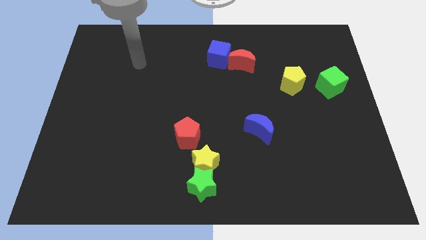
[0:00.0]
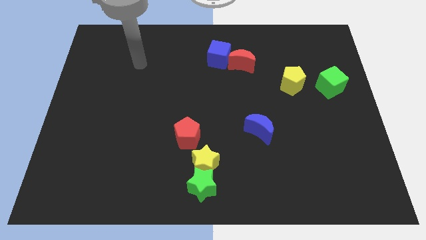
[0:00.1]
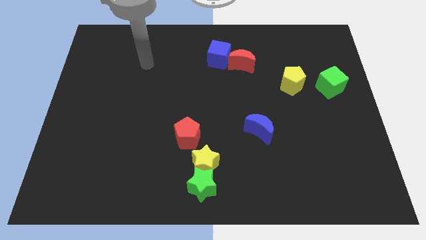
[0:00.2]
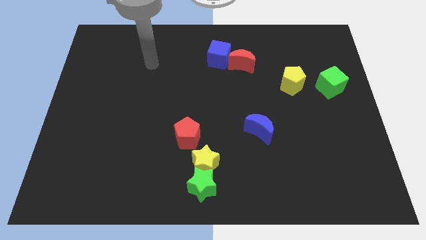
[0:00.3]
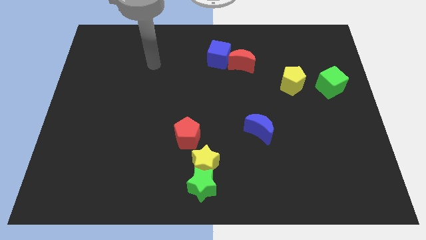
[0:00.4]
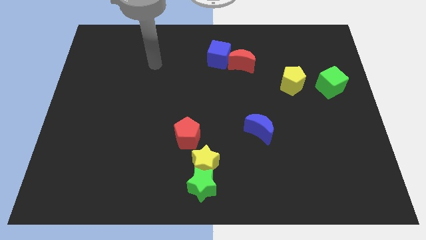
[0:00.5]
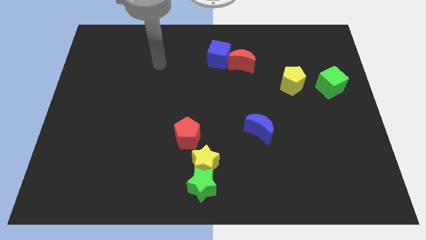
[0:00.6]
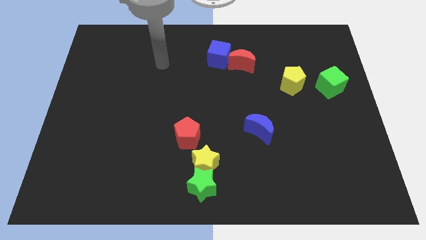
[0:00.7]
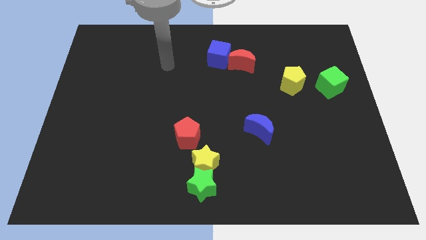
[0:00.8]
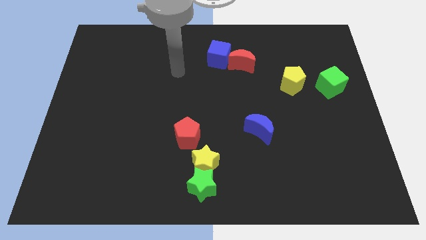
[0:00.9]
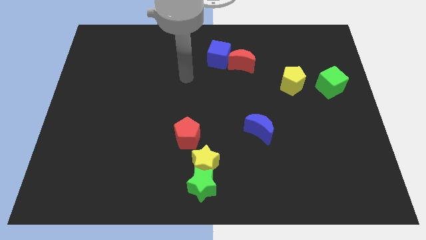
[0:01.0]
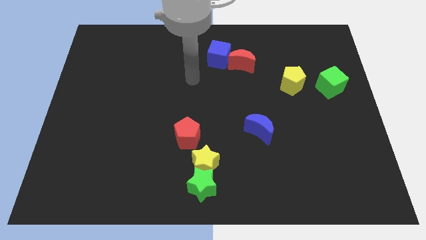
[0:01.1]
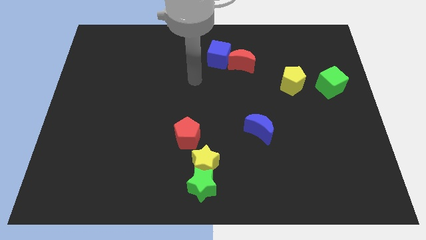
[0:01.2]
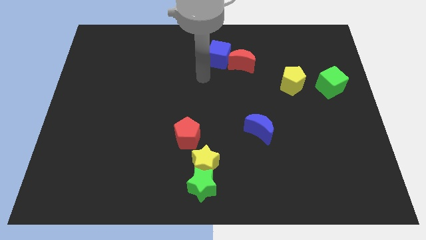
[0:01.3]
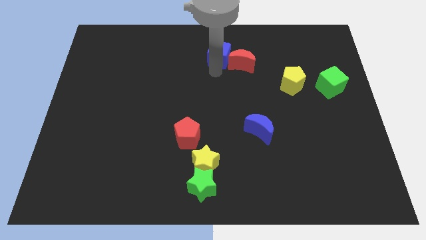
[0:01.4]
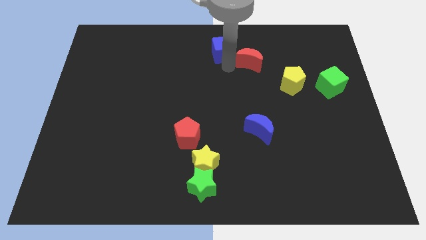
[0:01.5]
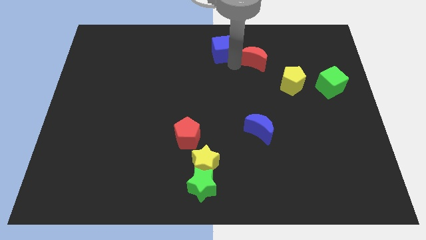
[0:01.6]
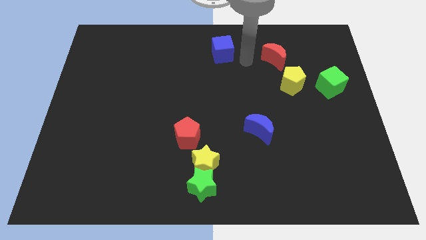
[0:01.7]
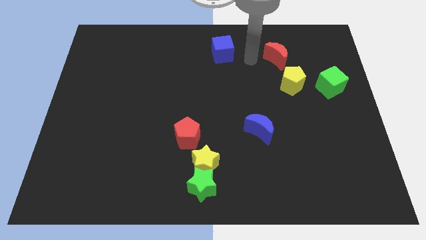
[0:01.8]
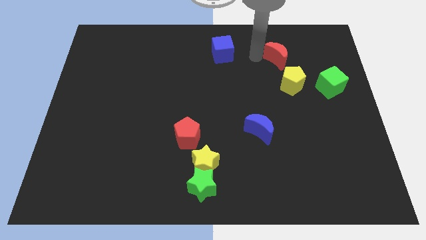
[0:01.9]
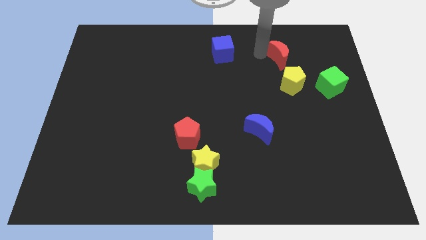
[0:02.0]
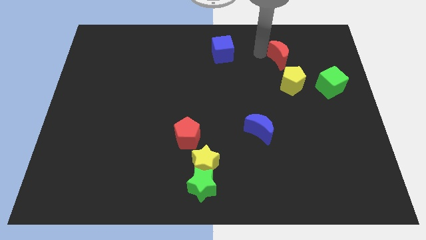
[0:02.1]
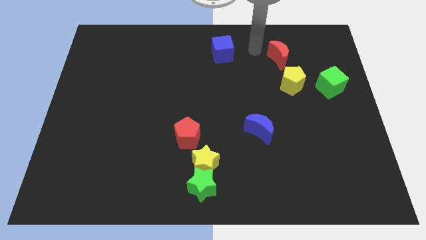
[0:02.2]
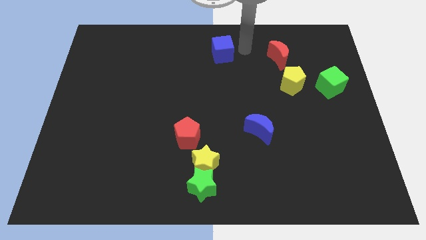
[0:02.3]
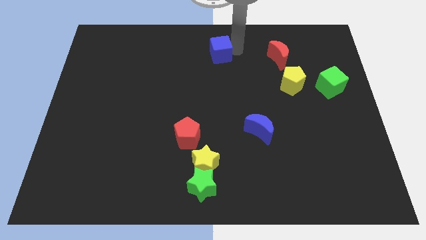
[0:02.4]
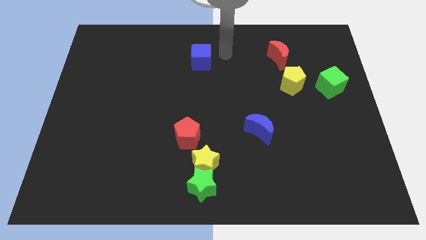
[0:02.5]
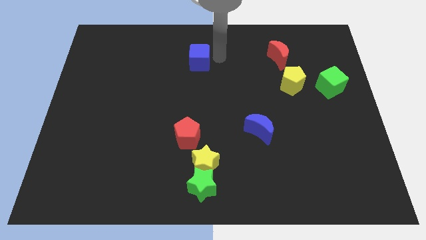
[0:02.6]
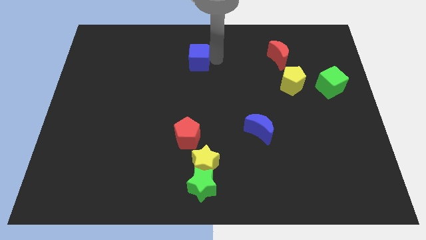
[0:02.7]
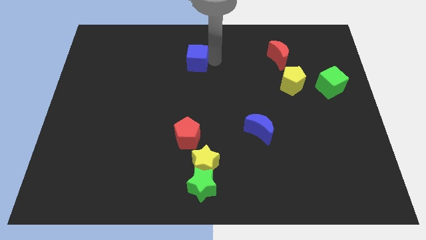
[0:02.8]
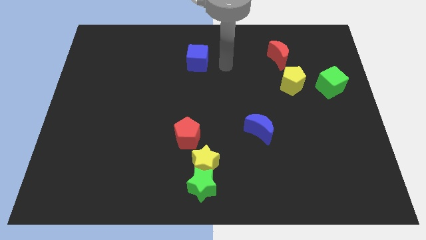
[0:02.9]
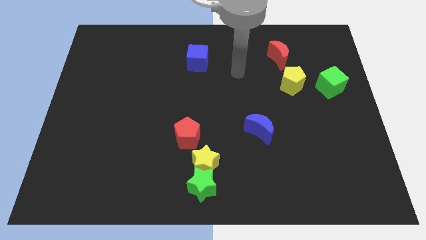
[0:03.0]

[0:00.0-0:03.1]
push red crescent above yellow pentagon

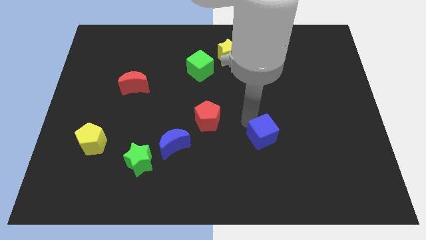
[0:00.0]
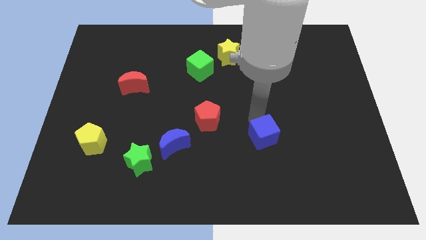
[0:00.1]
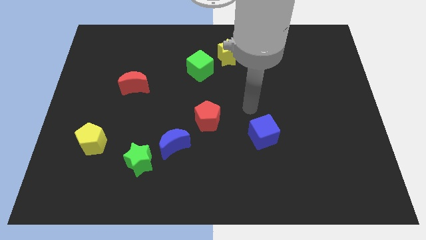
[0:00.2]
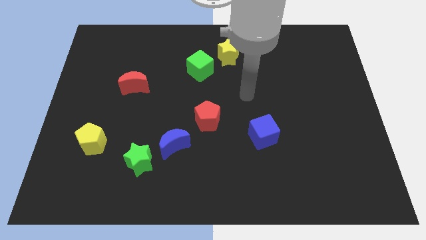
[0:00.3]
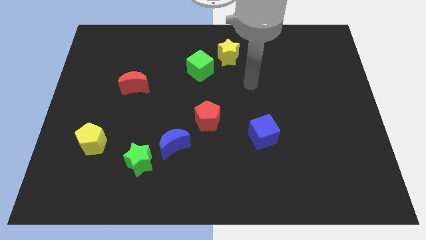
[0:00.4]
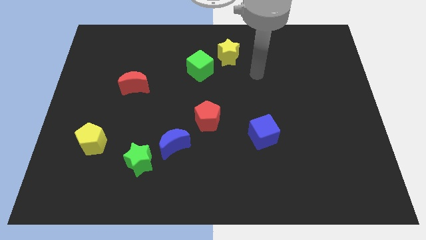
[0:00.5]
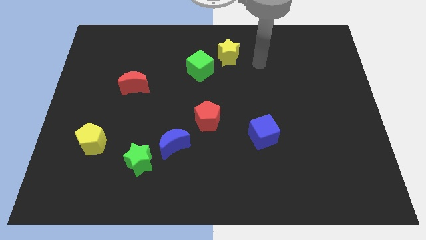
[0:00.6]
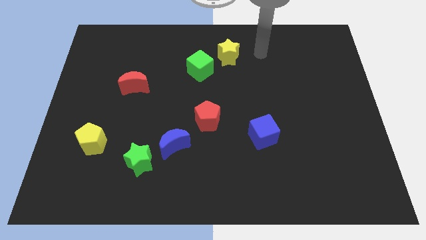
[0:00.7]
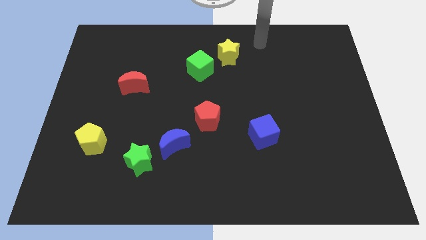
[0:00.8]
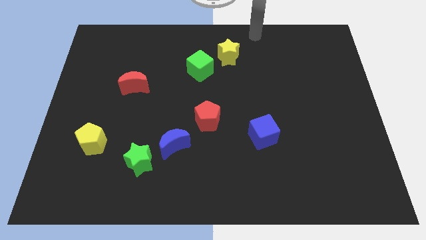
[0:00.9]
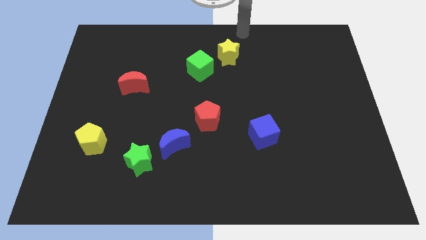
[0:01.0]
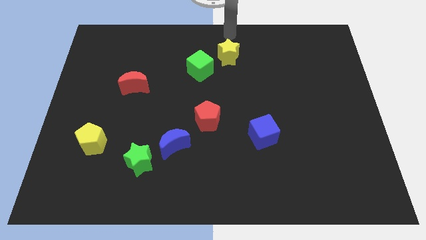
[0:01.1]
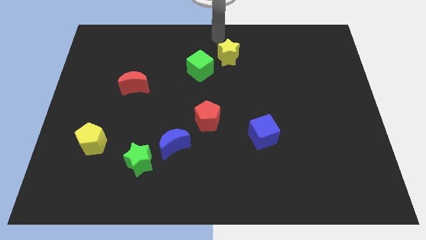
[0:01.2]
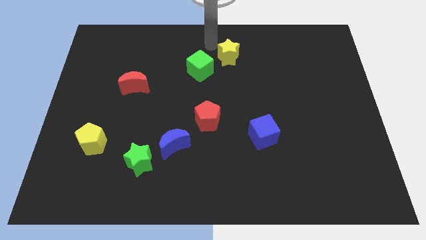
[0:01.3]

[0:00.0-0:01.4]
move the arm to the center top

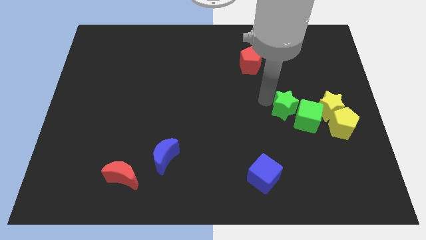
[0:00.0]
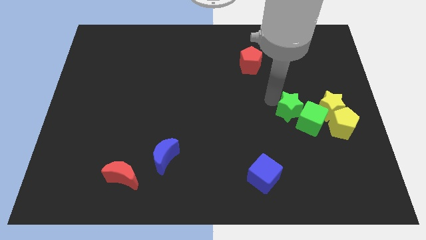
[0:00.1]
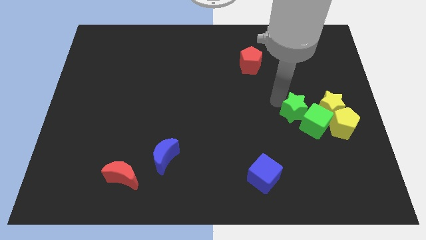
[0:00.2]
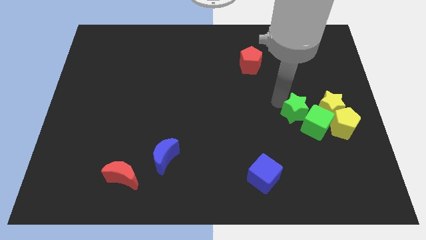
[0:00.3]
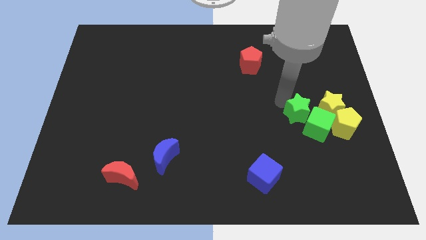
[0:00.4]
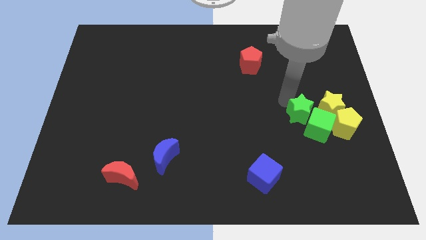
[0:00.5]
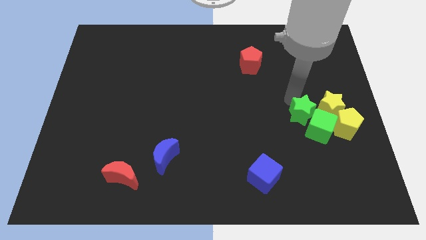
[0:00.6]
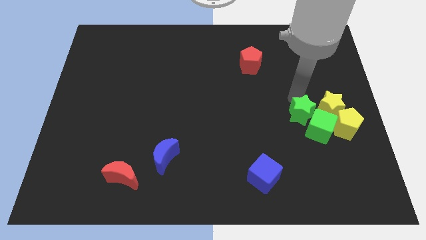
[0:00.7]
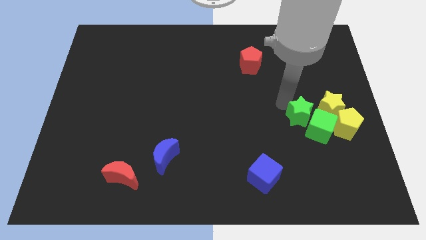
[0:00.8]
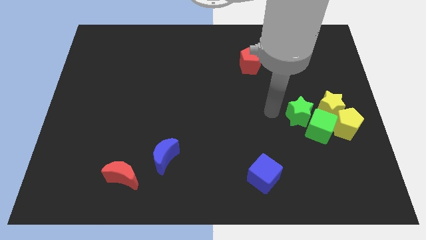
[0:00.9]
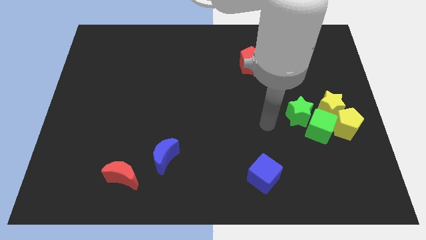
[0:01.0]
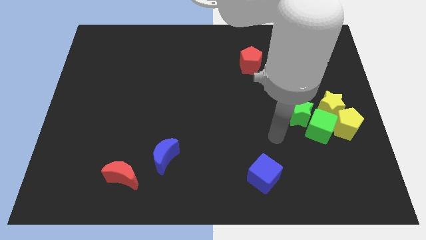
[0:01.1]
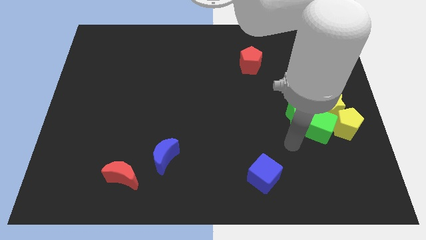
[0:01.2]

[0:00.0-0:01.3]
push green blocks into the yellow blocks

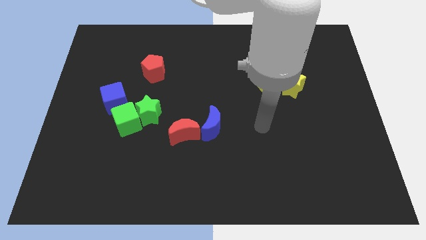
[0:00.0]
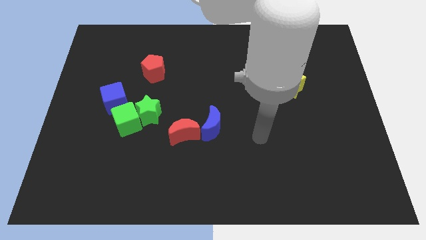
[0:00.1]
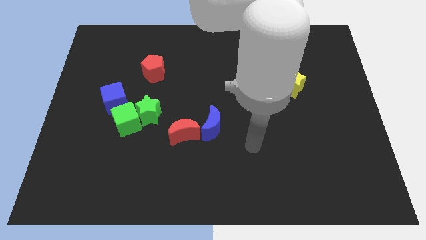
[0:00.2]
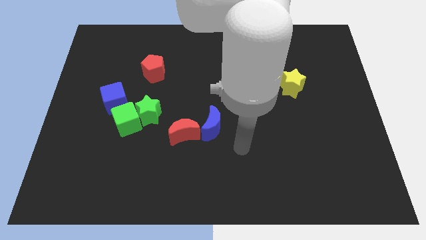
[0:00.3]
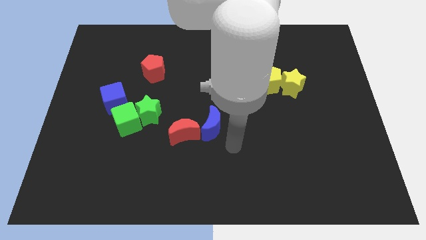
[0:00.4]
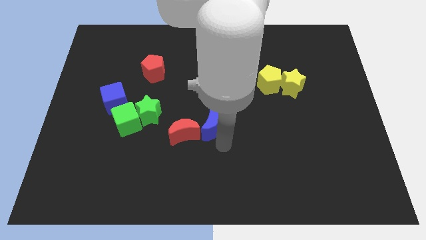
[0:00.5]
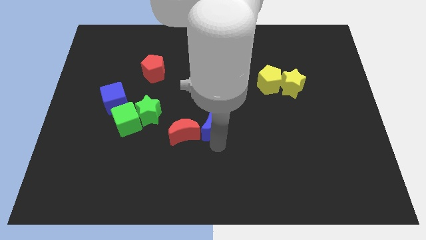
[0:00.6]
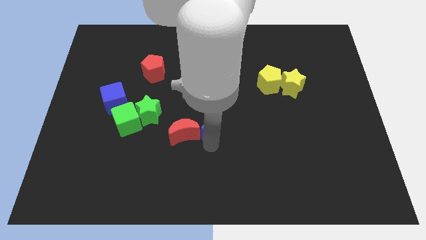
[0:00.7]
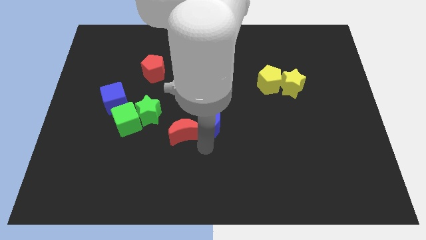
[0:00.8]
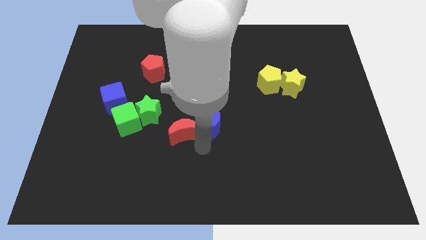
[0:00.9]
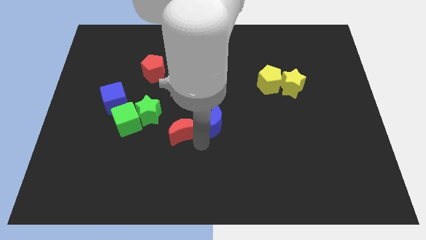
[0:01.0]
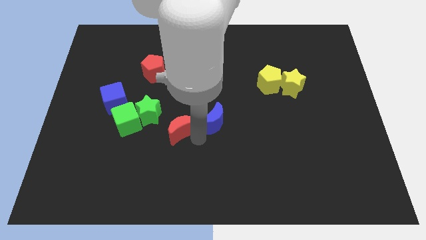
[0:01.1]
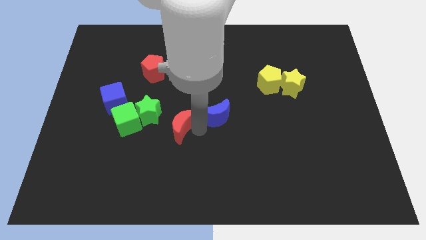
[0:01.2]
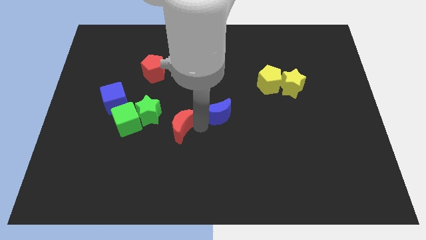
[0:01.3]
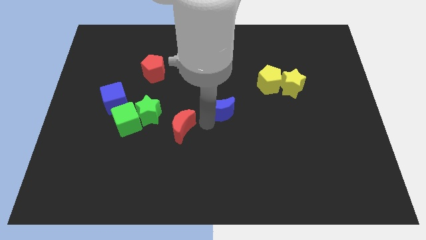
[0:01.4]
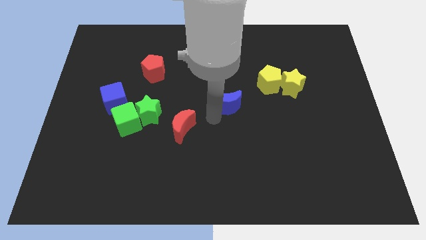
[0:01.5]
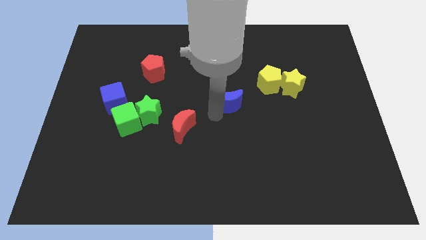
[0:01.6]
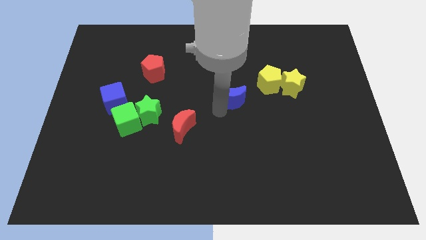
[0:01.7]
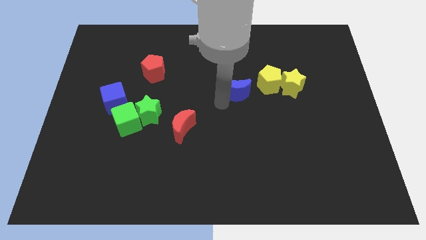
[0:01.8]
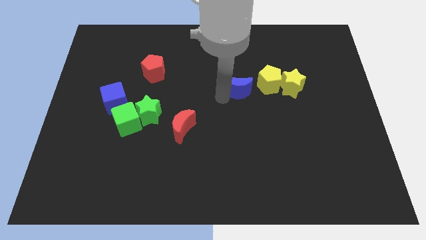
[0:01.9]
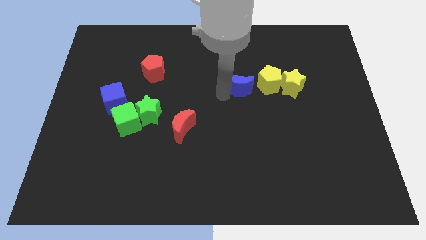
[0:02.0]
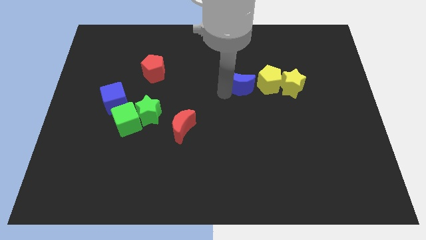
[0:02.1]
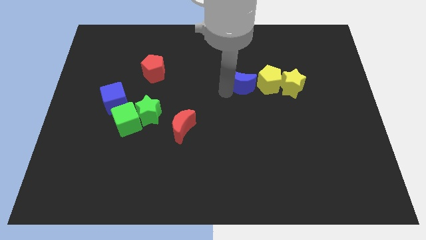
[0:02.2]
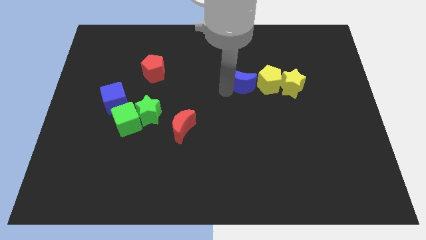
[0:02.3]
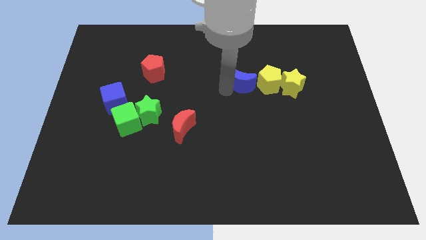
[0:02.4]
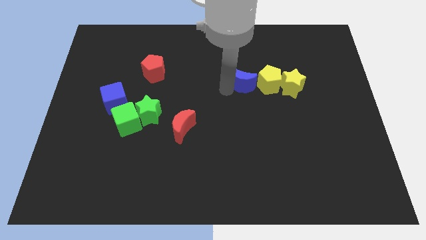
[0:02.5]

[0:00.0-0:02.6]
separate blue moon and red moon

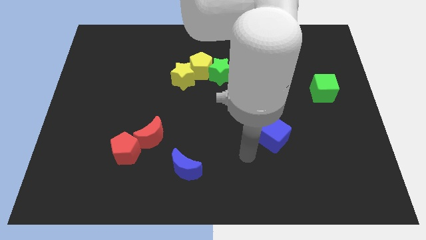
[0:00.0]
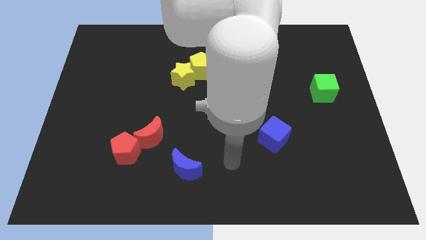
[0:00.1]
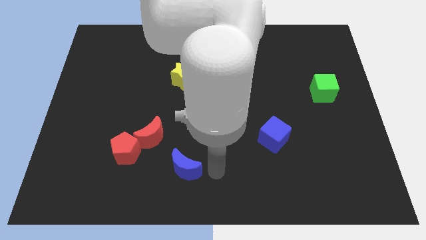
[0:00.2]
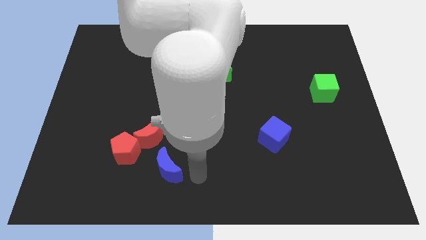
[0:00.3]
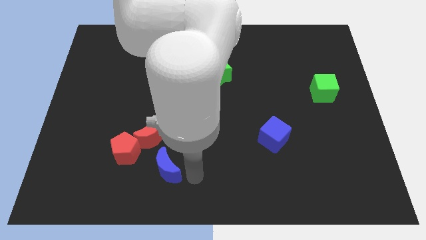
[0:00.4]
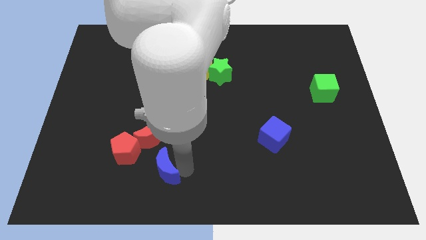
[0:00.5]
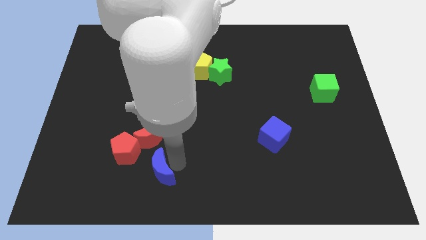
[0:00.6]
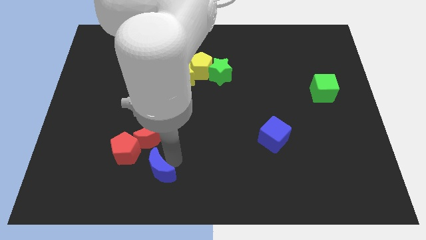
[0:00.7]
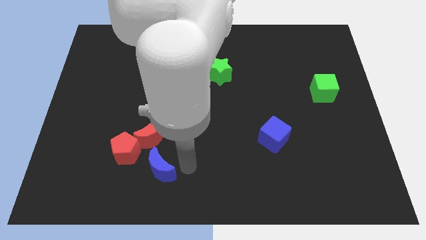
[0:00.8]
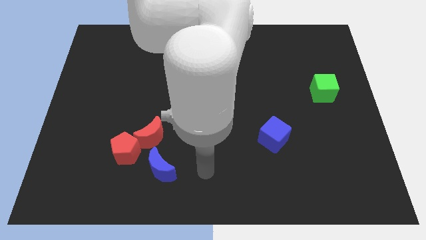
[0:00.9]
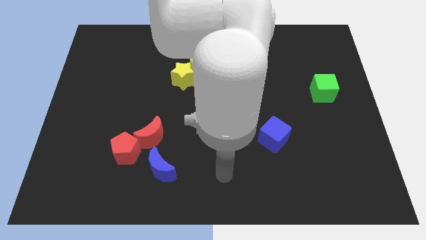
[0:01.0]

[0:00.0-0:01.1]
push the blue crescent to the bottom of the red crescent
